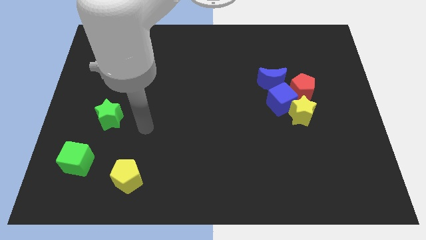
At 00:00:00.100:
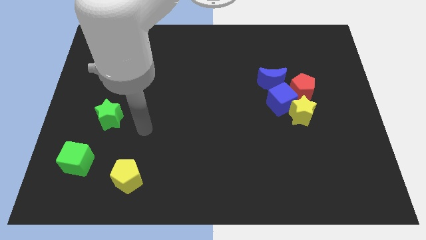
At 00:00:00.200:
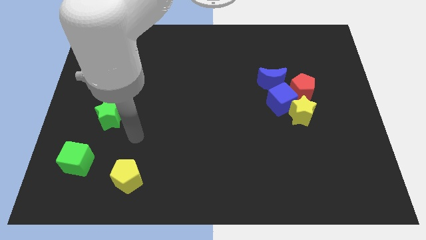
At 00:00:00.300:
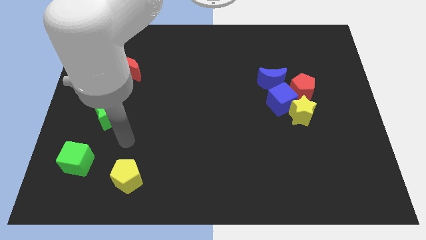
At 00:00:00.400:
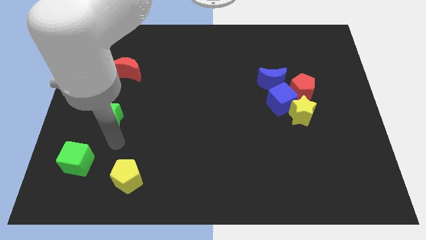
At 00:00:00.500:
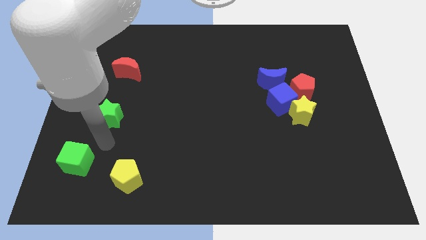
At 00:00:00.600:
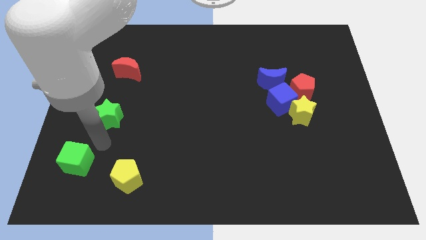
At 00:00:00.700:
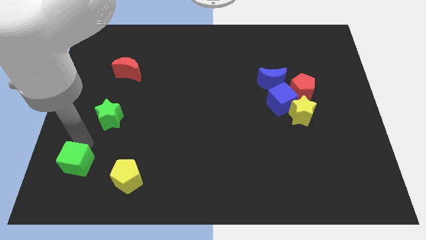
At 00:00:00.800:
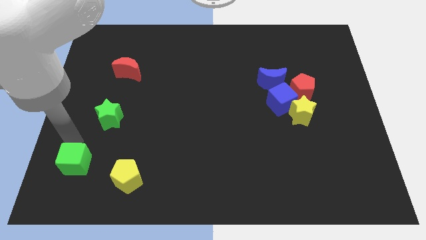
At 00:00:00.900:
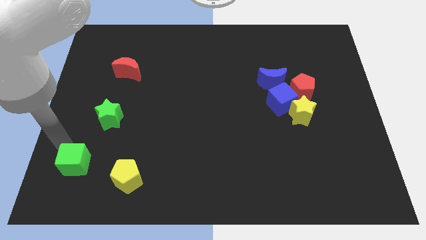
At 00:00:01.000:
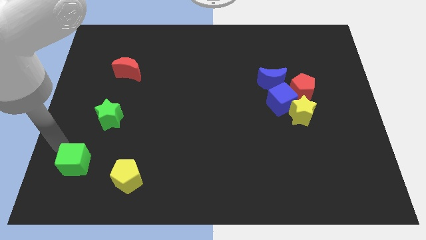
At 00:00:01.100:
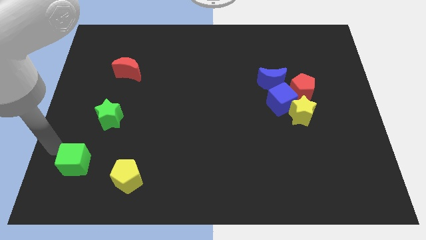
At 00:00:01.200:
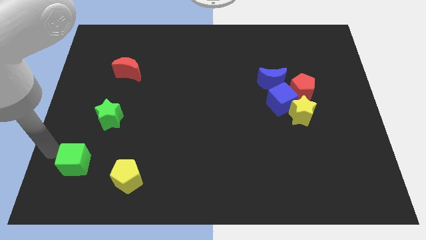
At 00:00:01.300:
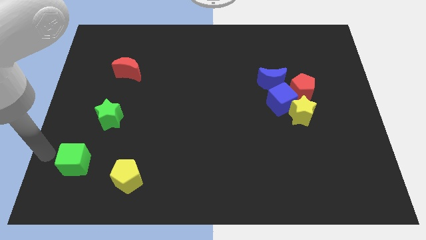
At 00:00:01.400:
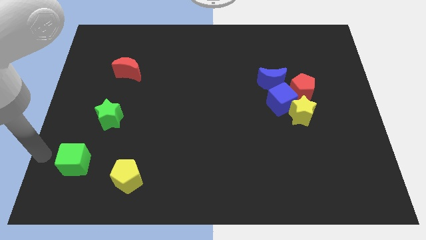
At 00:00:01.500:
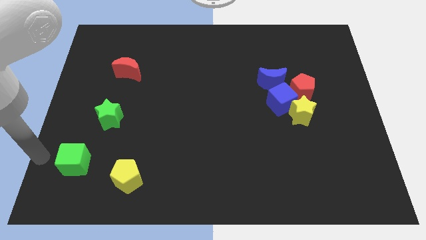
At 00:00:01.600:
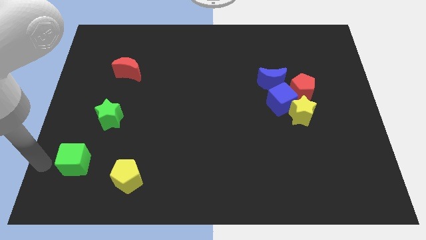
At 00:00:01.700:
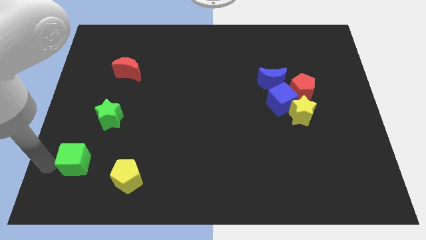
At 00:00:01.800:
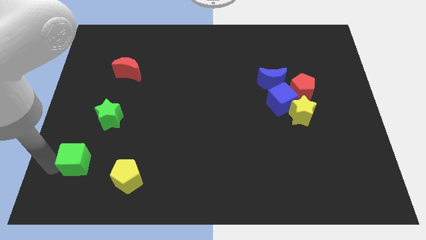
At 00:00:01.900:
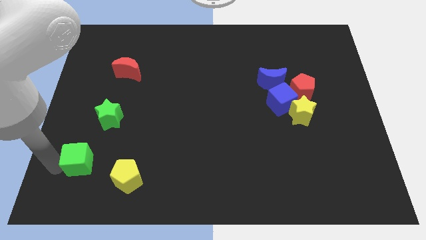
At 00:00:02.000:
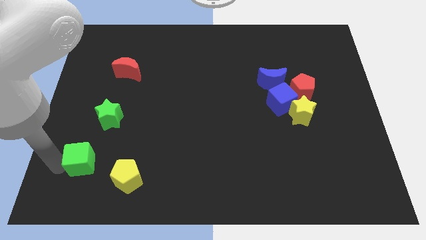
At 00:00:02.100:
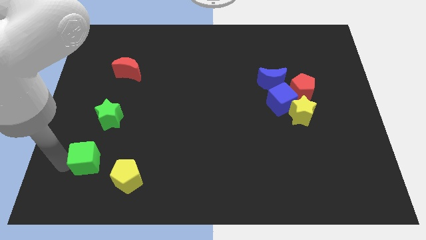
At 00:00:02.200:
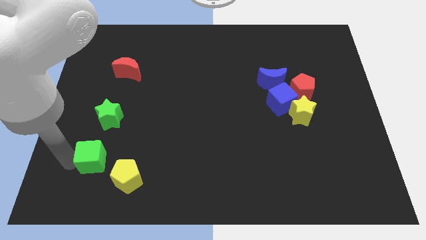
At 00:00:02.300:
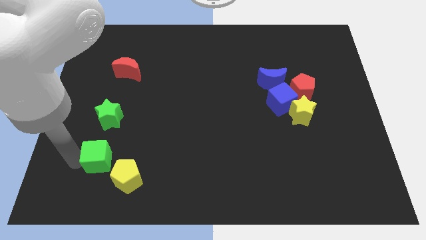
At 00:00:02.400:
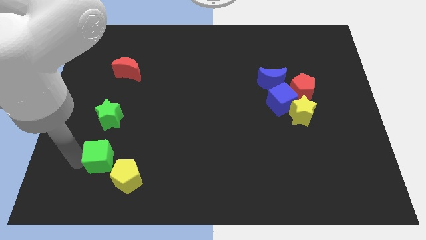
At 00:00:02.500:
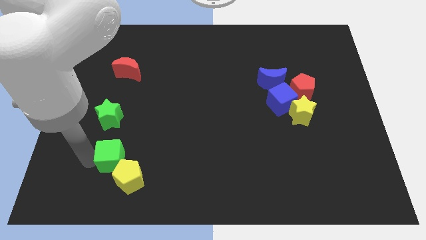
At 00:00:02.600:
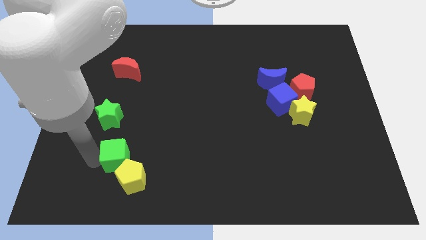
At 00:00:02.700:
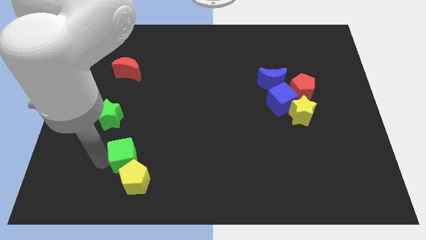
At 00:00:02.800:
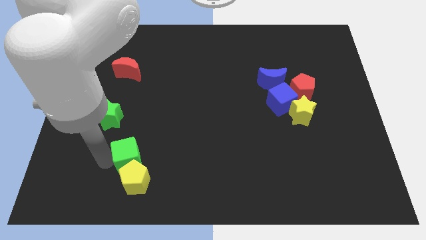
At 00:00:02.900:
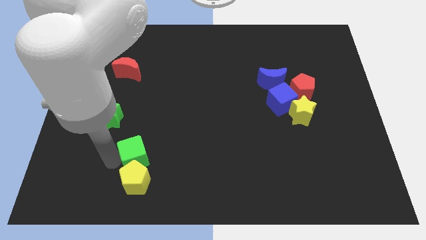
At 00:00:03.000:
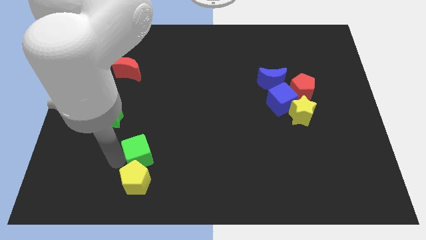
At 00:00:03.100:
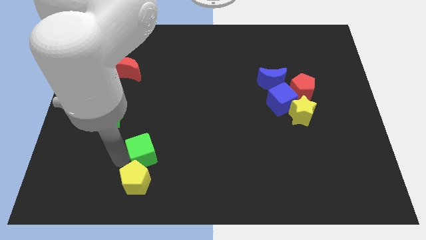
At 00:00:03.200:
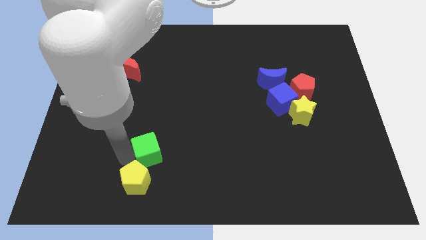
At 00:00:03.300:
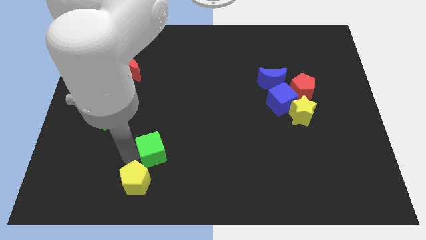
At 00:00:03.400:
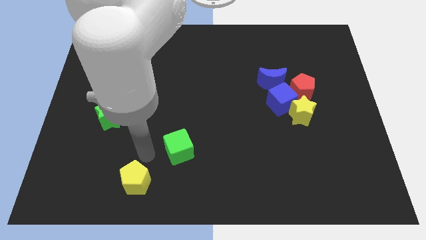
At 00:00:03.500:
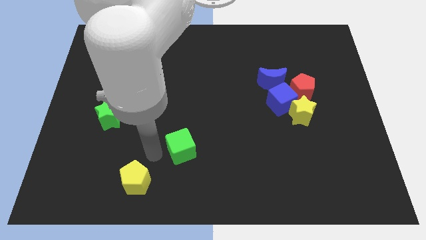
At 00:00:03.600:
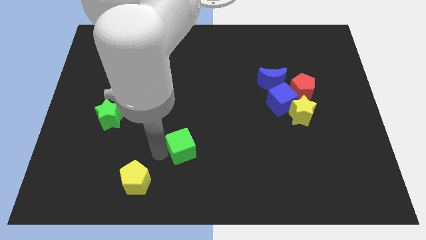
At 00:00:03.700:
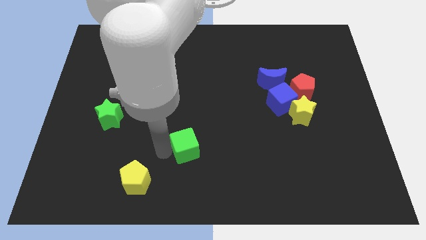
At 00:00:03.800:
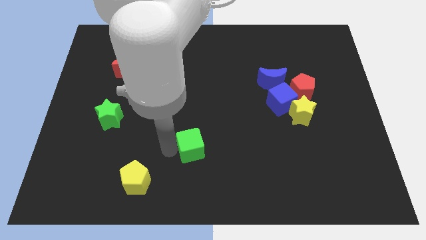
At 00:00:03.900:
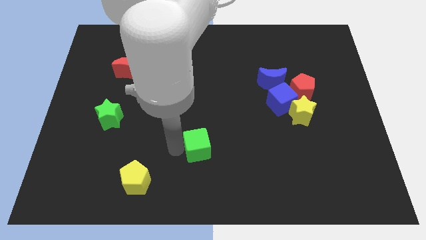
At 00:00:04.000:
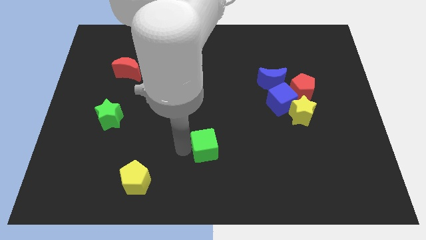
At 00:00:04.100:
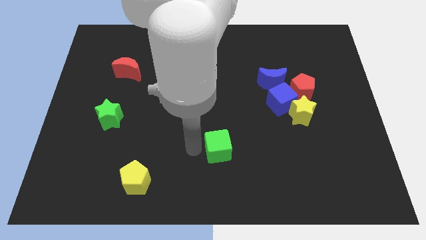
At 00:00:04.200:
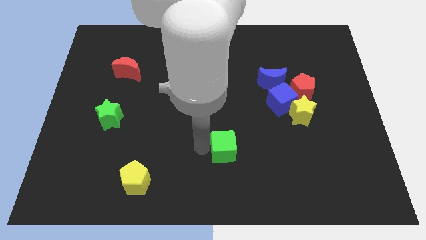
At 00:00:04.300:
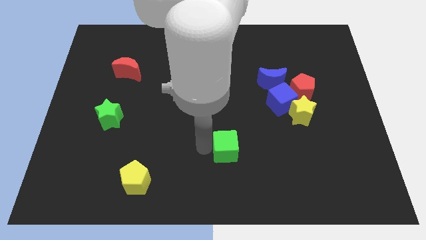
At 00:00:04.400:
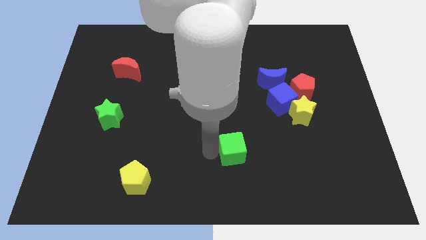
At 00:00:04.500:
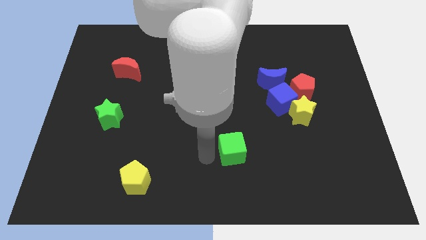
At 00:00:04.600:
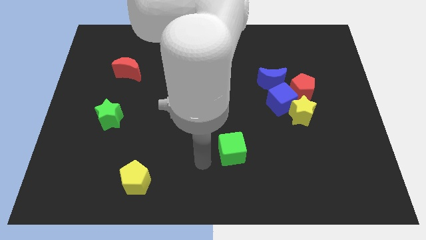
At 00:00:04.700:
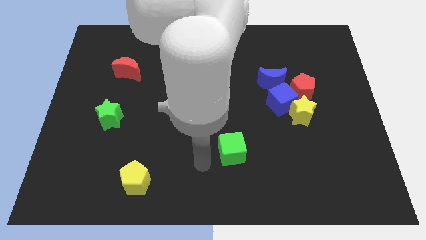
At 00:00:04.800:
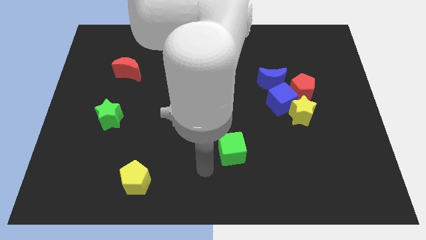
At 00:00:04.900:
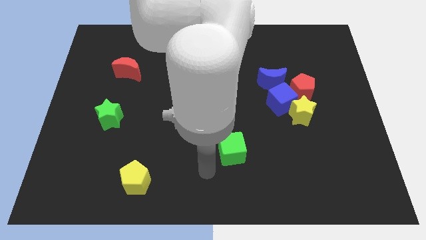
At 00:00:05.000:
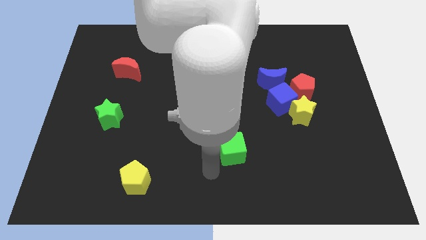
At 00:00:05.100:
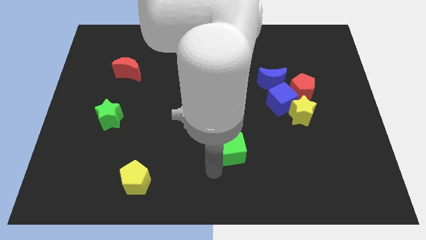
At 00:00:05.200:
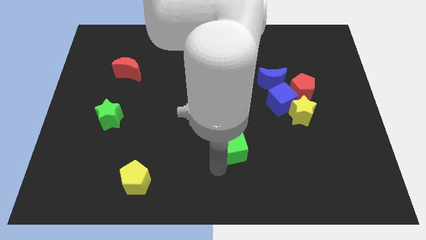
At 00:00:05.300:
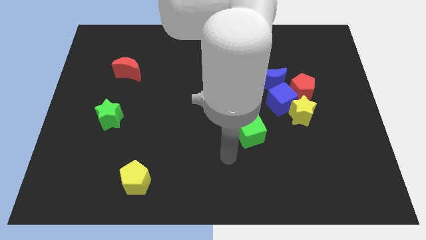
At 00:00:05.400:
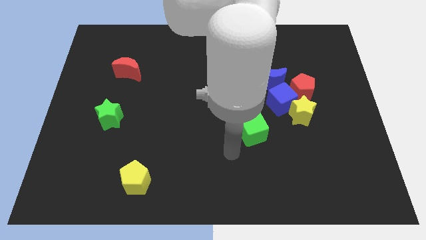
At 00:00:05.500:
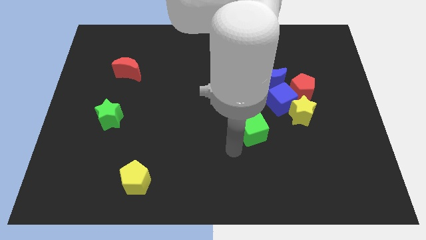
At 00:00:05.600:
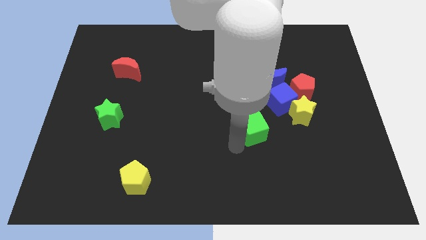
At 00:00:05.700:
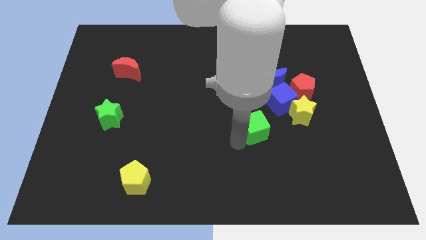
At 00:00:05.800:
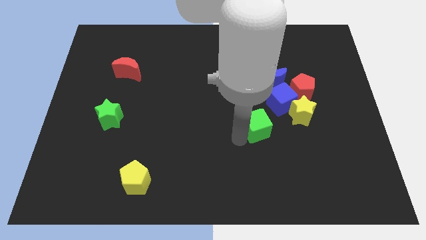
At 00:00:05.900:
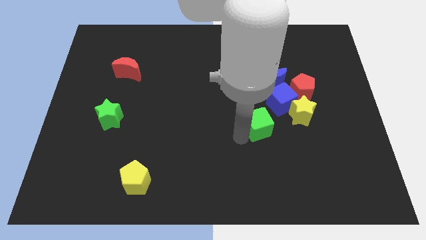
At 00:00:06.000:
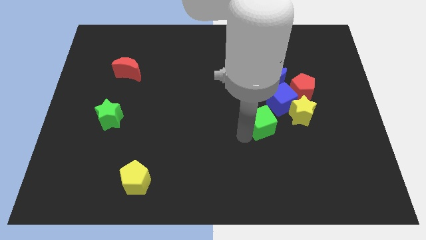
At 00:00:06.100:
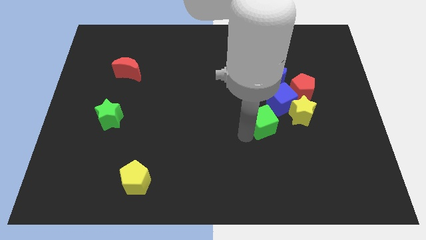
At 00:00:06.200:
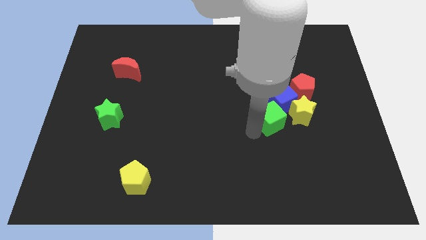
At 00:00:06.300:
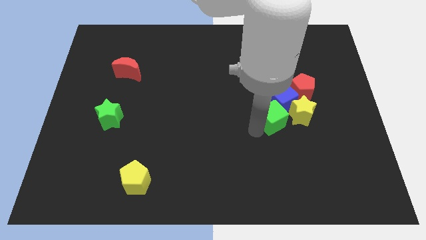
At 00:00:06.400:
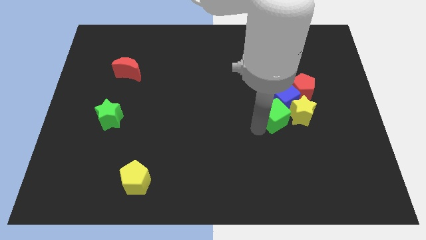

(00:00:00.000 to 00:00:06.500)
slide the green cube to the blue cube

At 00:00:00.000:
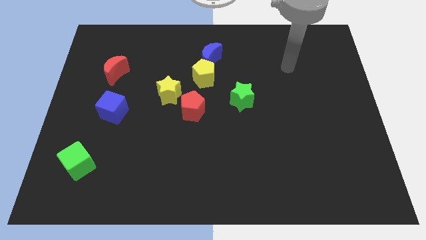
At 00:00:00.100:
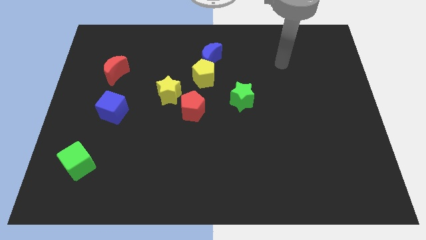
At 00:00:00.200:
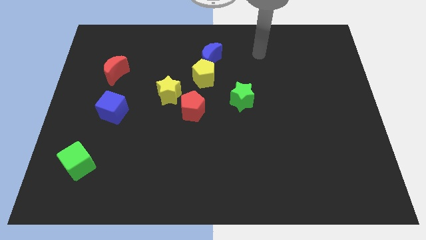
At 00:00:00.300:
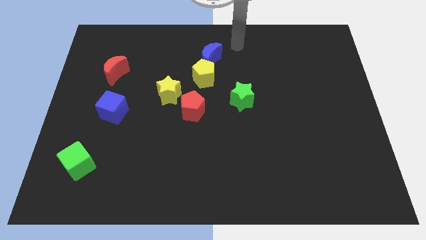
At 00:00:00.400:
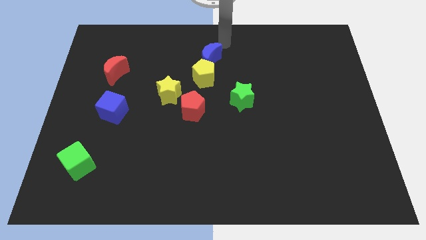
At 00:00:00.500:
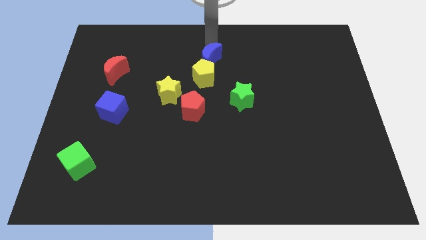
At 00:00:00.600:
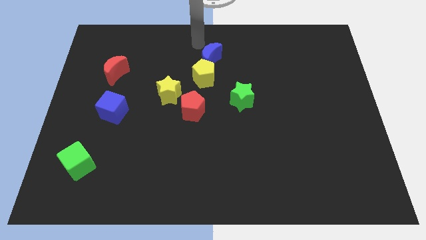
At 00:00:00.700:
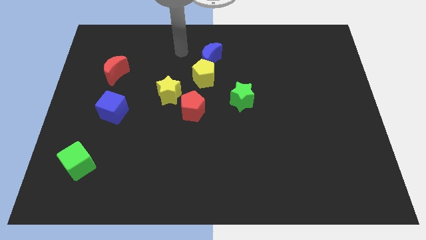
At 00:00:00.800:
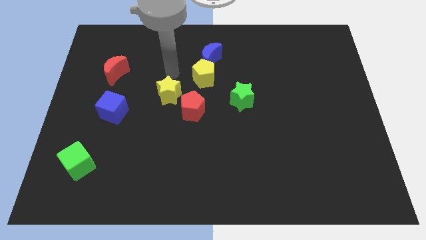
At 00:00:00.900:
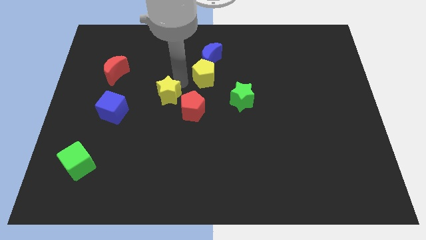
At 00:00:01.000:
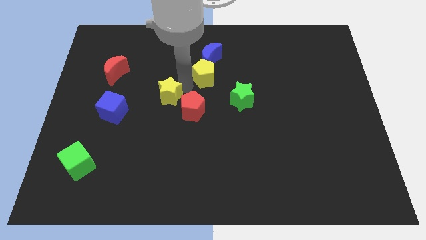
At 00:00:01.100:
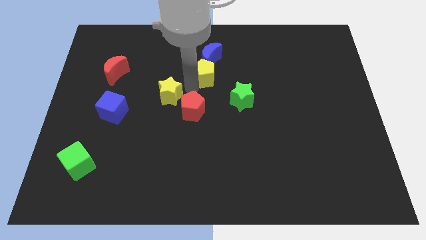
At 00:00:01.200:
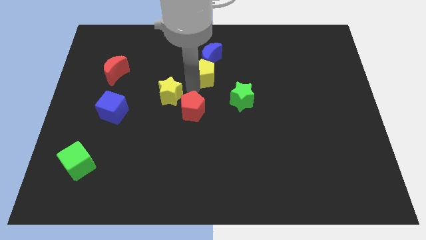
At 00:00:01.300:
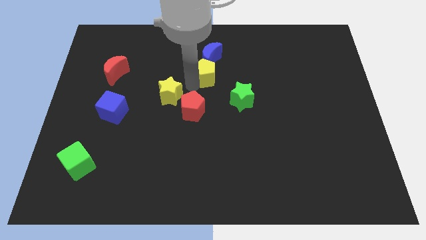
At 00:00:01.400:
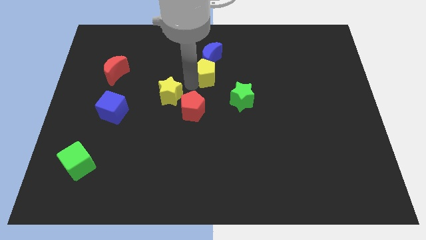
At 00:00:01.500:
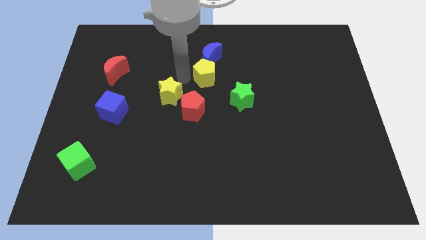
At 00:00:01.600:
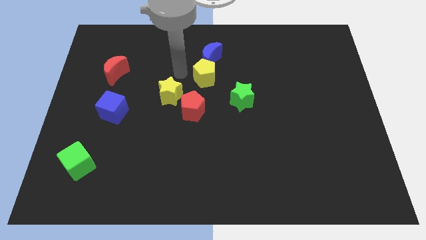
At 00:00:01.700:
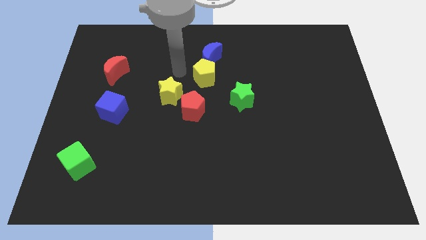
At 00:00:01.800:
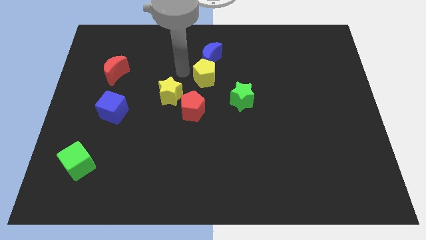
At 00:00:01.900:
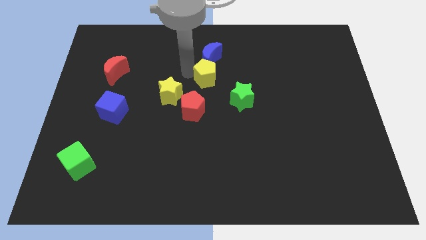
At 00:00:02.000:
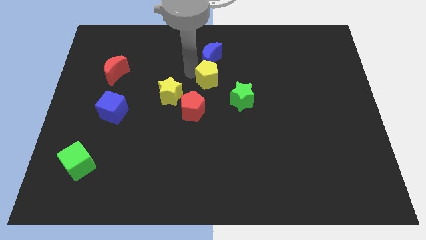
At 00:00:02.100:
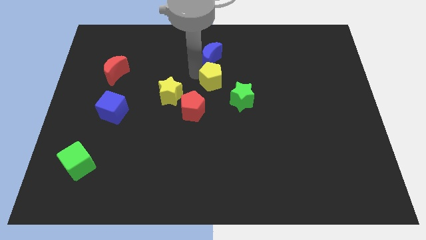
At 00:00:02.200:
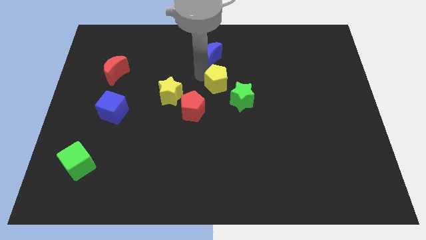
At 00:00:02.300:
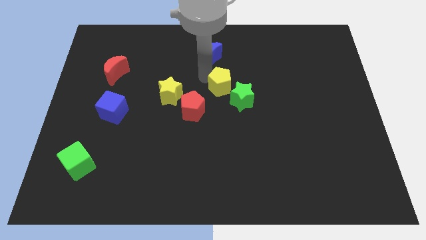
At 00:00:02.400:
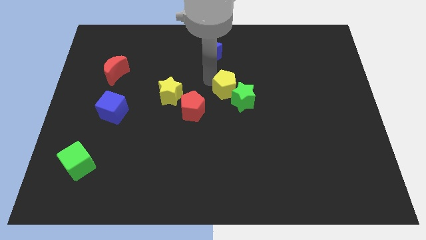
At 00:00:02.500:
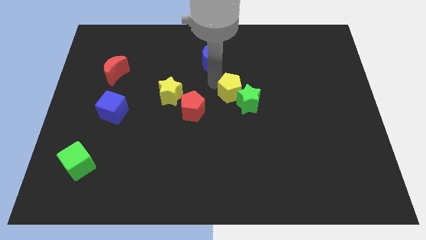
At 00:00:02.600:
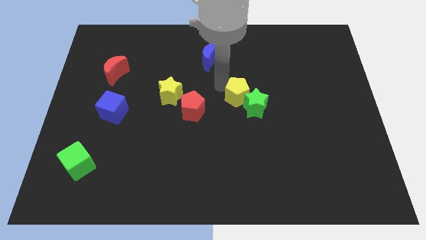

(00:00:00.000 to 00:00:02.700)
push the yellow pentagon towards the green star
